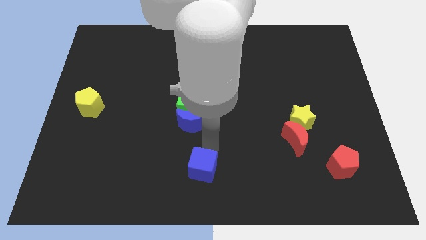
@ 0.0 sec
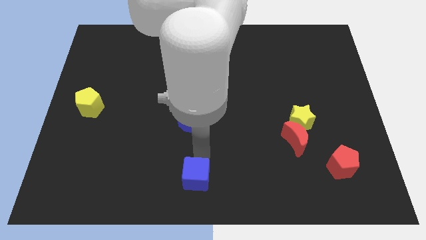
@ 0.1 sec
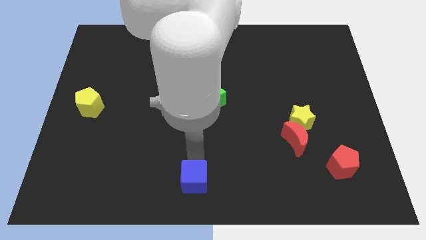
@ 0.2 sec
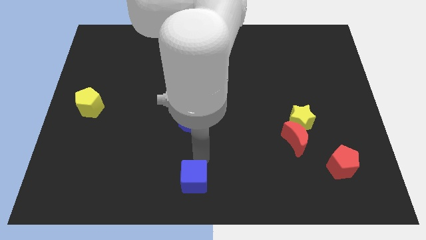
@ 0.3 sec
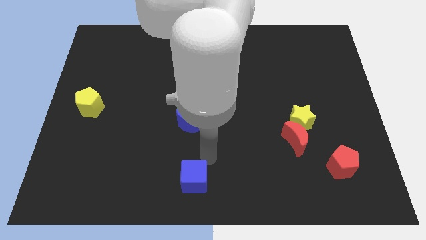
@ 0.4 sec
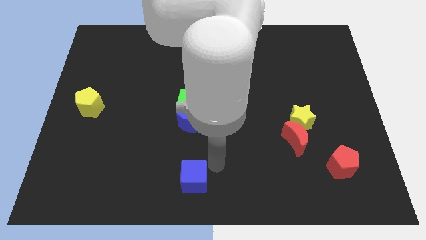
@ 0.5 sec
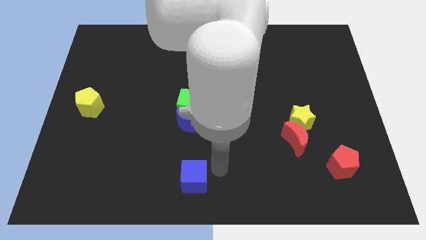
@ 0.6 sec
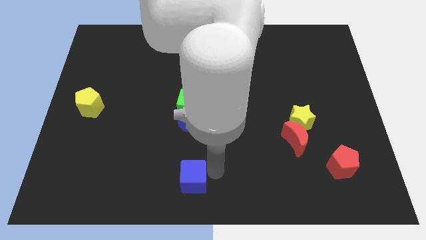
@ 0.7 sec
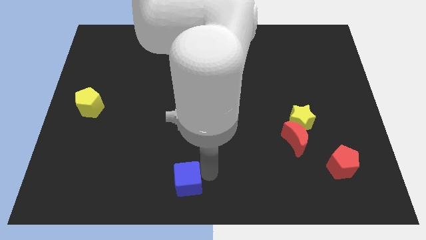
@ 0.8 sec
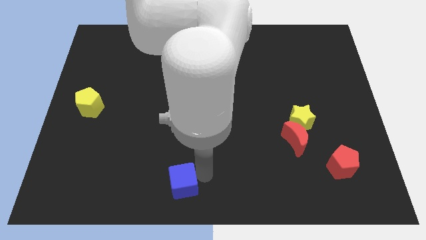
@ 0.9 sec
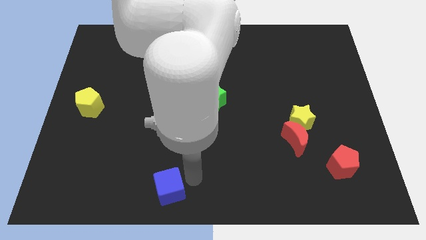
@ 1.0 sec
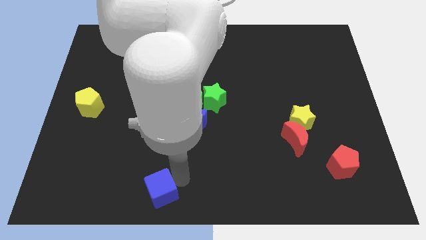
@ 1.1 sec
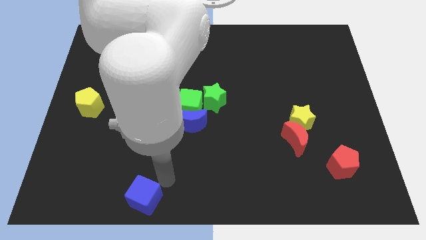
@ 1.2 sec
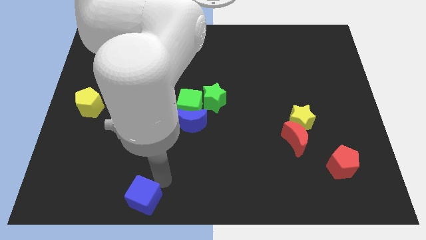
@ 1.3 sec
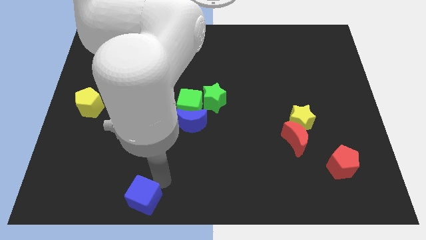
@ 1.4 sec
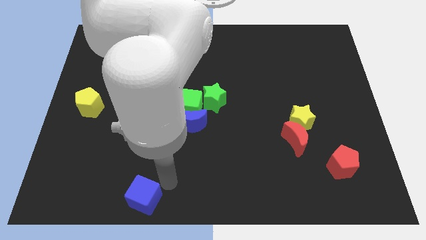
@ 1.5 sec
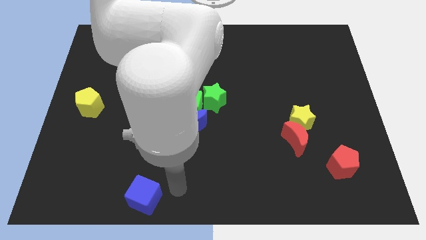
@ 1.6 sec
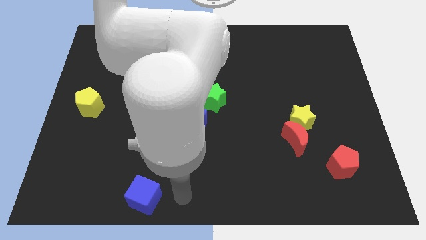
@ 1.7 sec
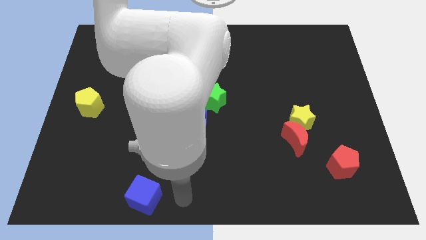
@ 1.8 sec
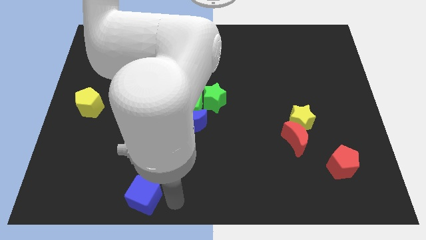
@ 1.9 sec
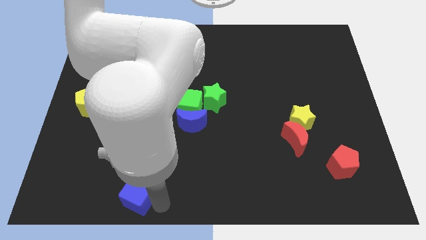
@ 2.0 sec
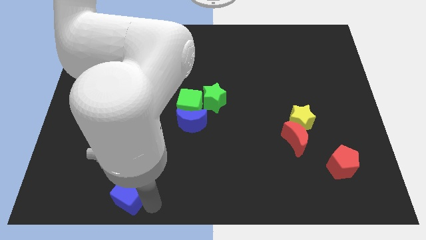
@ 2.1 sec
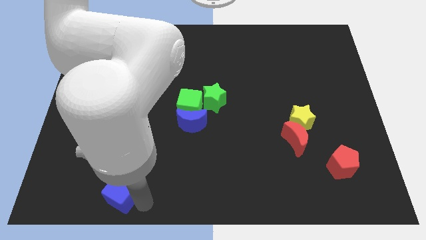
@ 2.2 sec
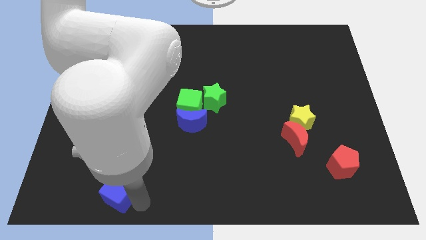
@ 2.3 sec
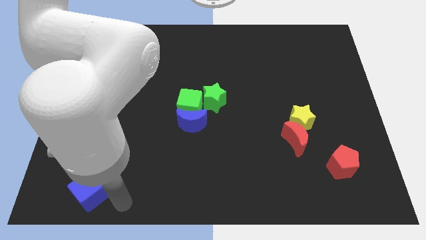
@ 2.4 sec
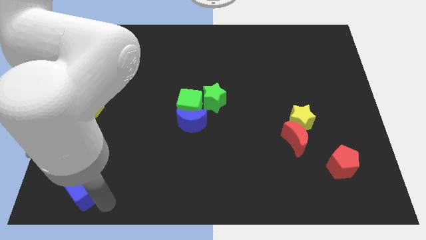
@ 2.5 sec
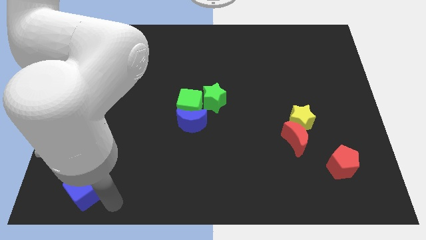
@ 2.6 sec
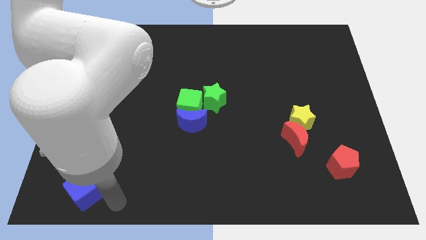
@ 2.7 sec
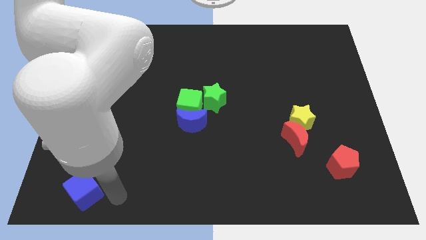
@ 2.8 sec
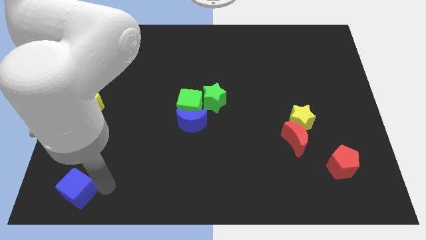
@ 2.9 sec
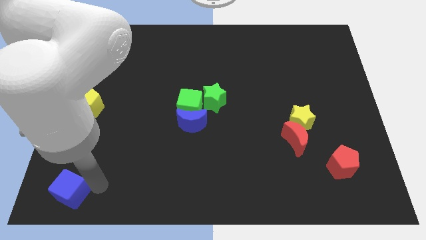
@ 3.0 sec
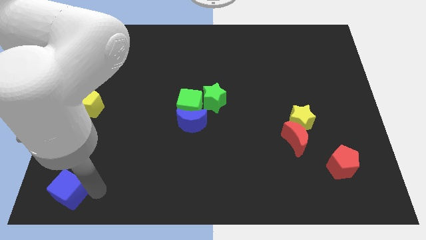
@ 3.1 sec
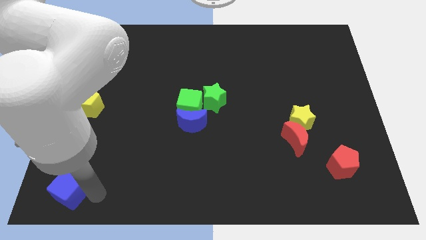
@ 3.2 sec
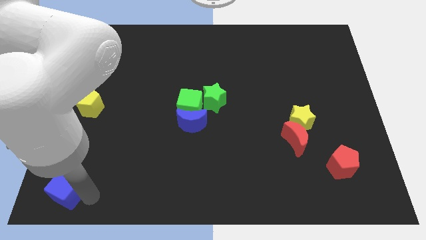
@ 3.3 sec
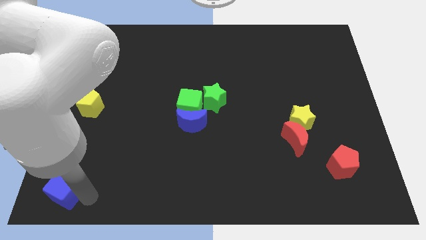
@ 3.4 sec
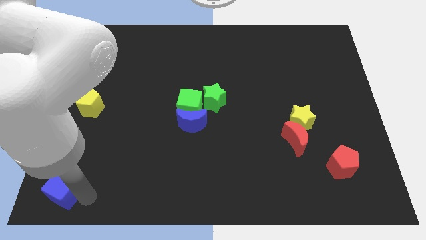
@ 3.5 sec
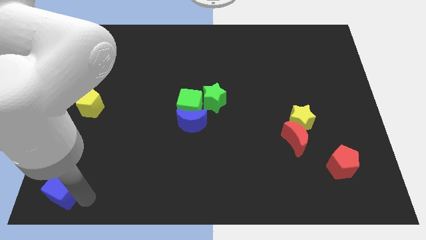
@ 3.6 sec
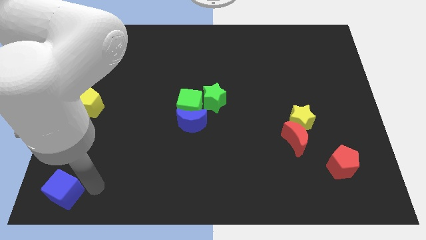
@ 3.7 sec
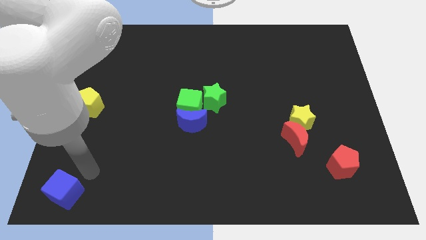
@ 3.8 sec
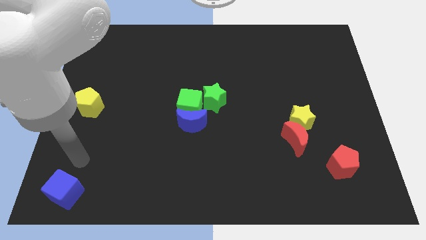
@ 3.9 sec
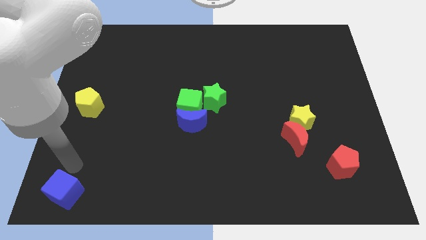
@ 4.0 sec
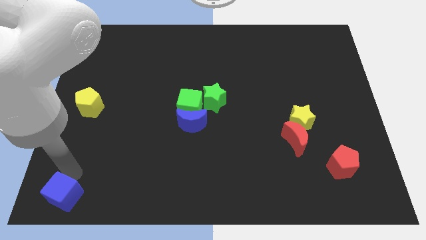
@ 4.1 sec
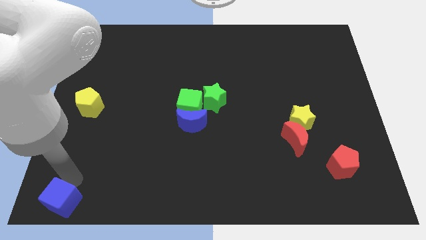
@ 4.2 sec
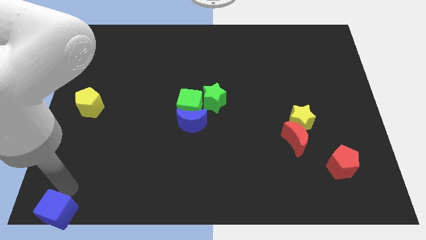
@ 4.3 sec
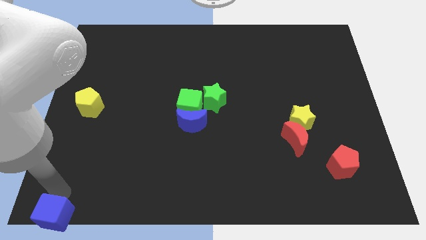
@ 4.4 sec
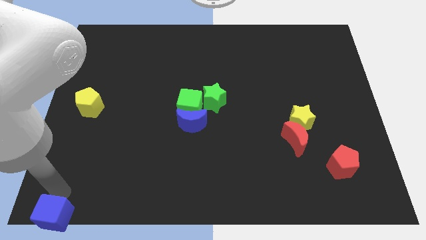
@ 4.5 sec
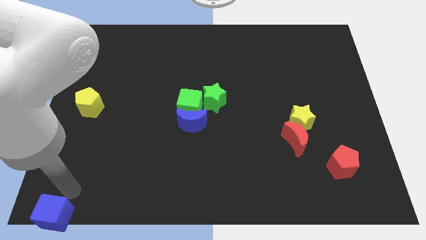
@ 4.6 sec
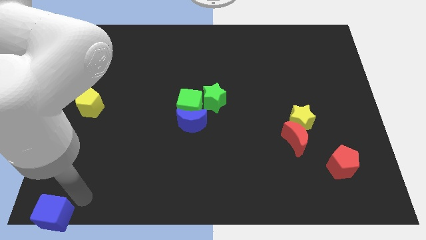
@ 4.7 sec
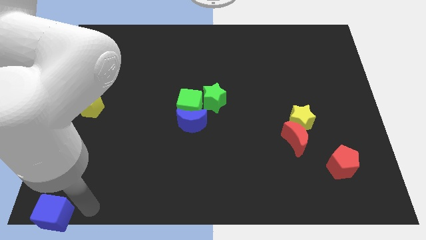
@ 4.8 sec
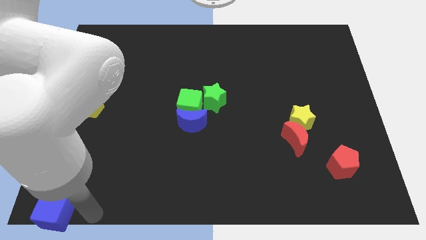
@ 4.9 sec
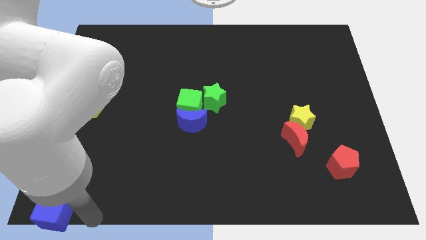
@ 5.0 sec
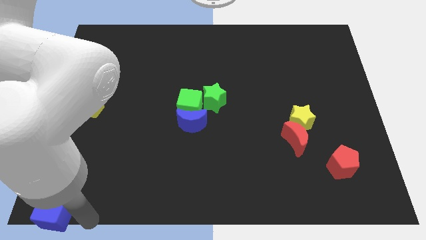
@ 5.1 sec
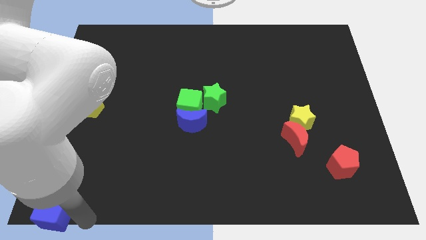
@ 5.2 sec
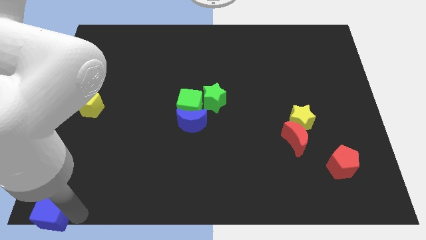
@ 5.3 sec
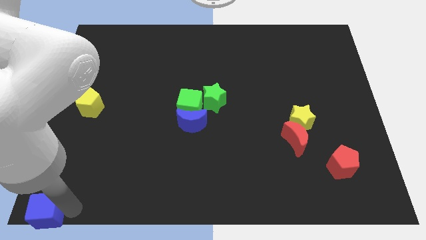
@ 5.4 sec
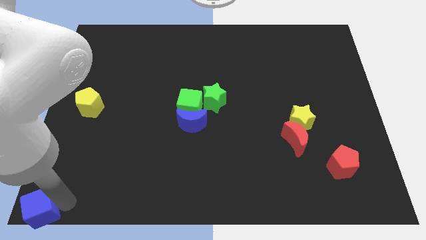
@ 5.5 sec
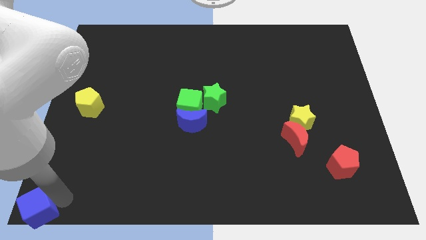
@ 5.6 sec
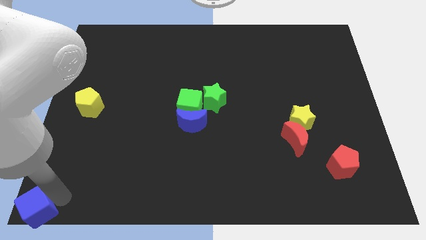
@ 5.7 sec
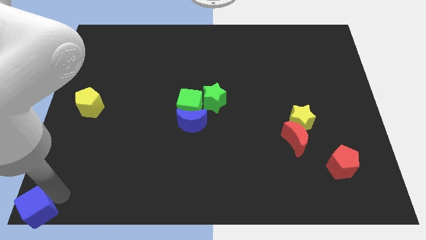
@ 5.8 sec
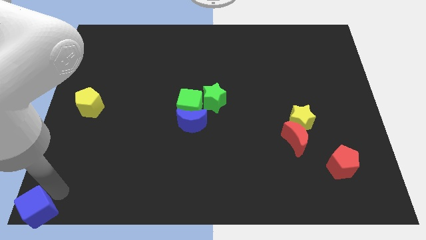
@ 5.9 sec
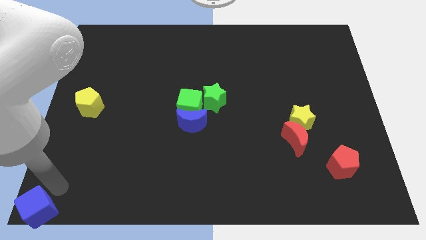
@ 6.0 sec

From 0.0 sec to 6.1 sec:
slide blue cube at the bottom left corner

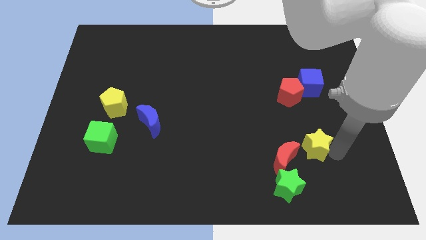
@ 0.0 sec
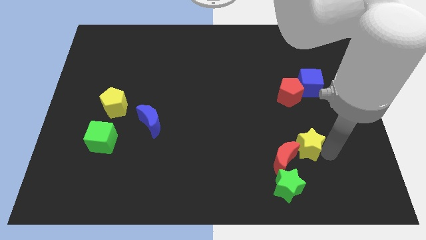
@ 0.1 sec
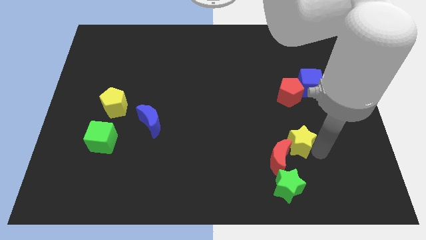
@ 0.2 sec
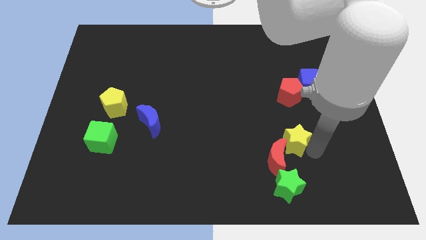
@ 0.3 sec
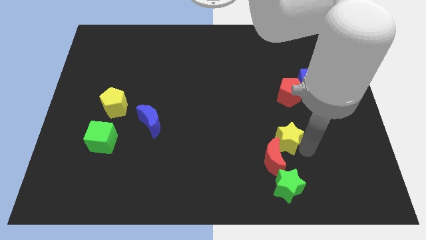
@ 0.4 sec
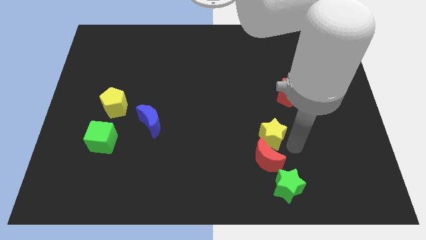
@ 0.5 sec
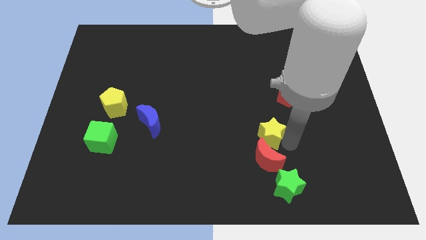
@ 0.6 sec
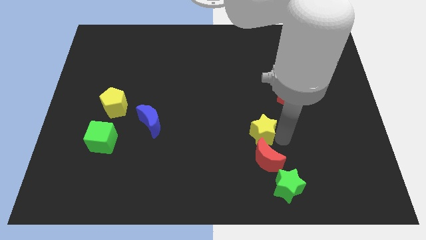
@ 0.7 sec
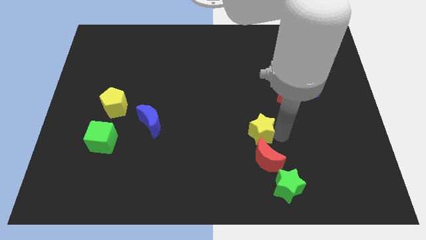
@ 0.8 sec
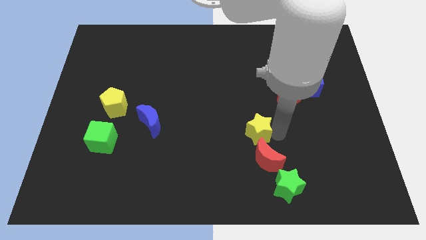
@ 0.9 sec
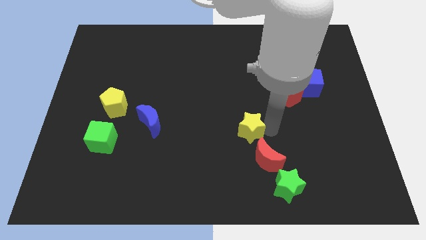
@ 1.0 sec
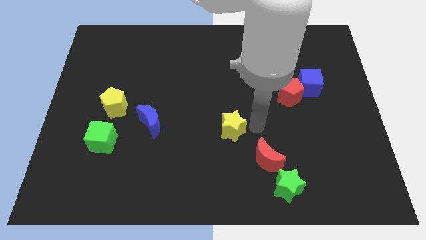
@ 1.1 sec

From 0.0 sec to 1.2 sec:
push the yellow star towards left

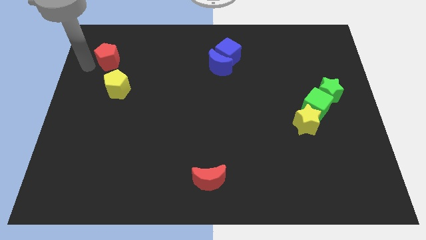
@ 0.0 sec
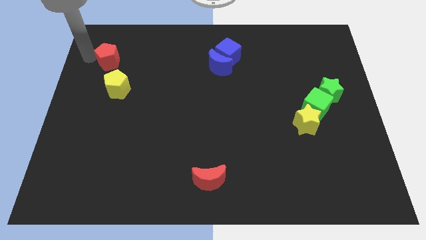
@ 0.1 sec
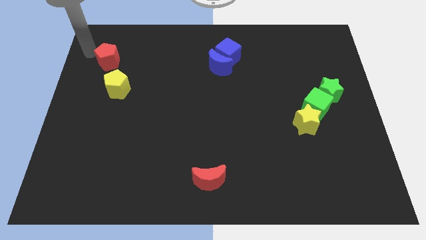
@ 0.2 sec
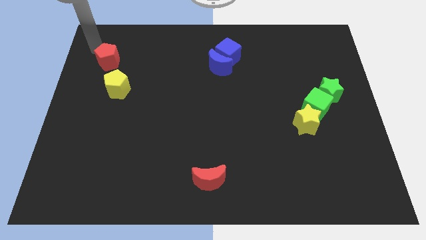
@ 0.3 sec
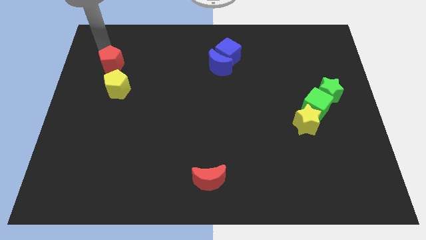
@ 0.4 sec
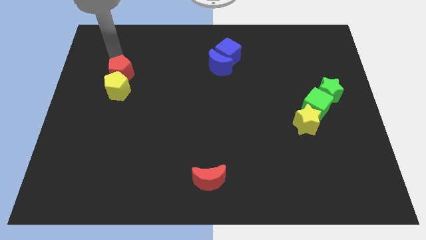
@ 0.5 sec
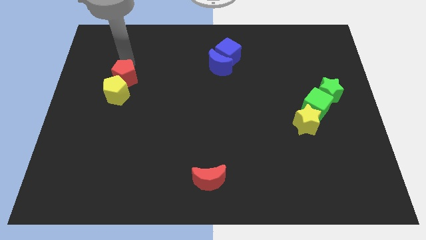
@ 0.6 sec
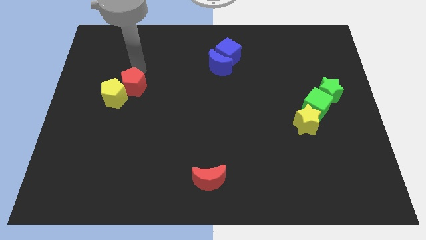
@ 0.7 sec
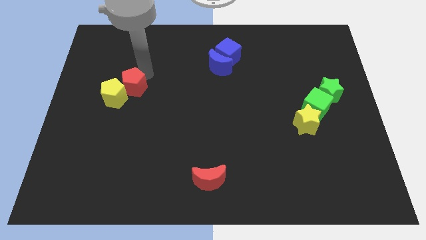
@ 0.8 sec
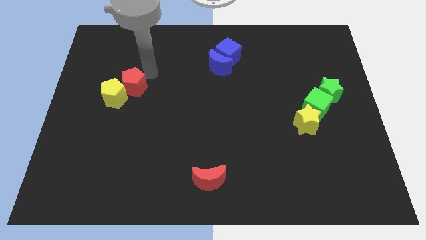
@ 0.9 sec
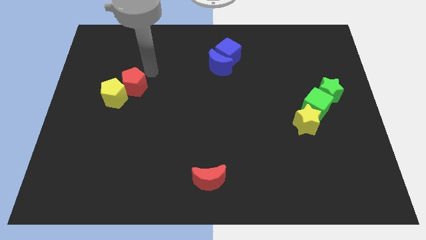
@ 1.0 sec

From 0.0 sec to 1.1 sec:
move red pentagon into yellow pentagon

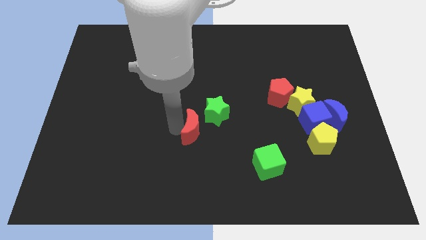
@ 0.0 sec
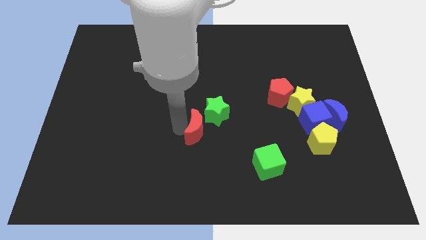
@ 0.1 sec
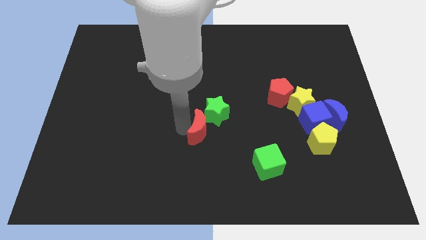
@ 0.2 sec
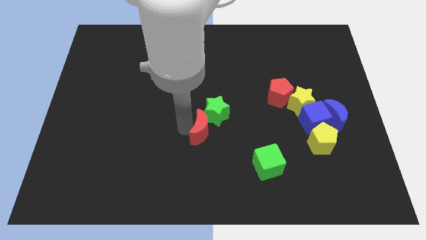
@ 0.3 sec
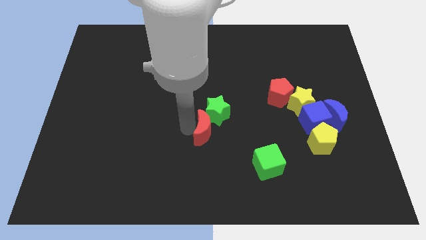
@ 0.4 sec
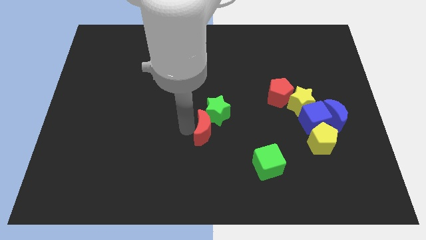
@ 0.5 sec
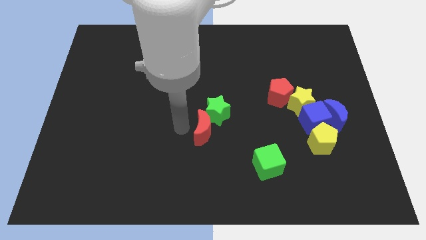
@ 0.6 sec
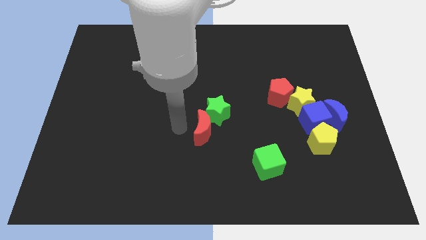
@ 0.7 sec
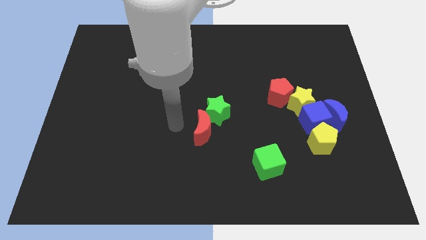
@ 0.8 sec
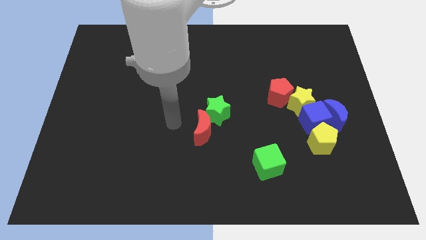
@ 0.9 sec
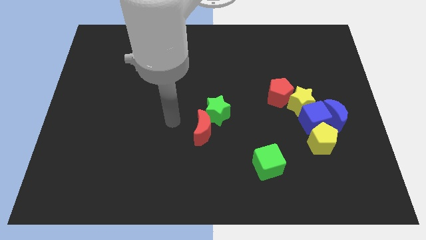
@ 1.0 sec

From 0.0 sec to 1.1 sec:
place the red crescent below the green star
